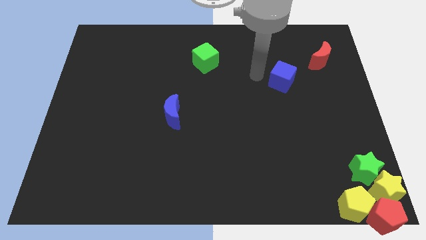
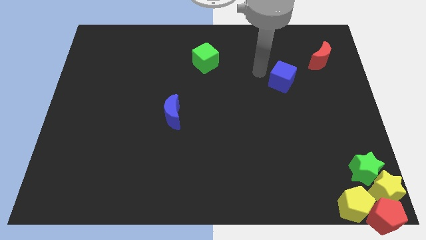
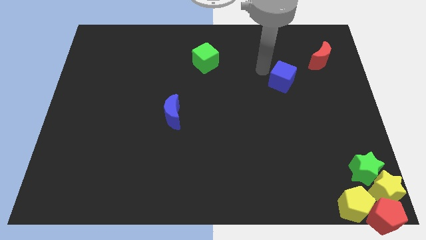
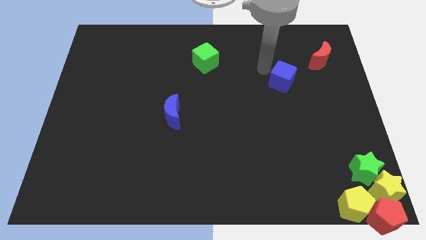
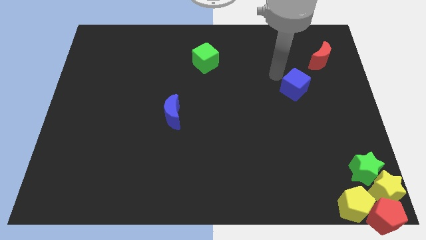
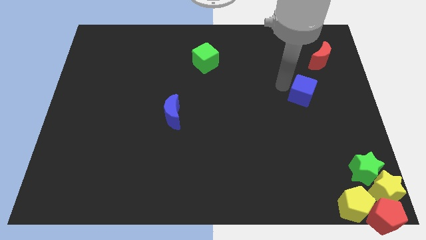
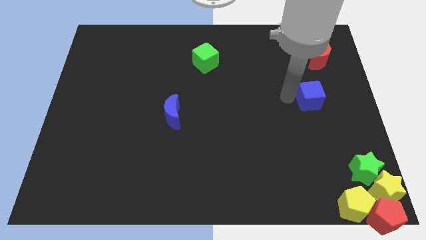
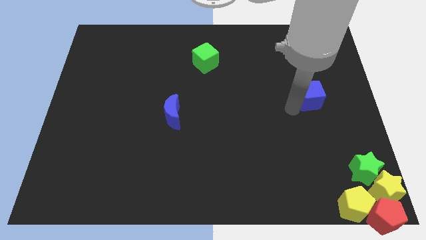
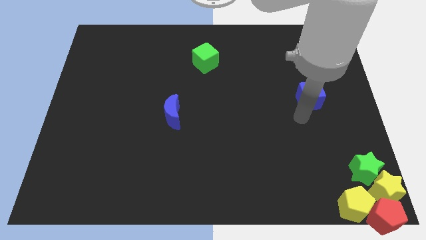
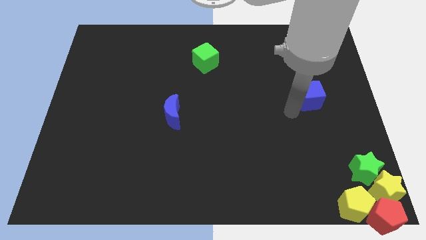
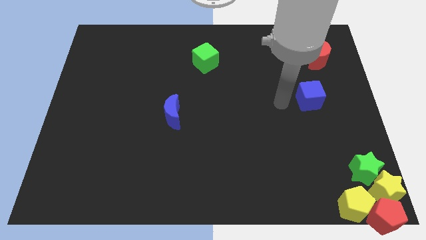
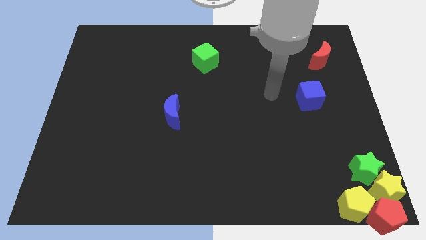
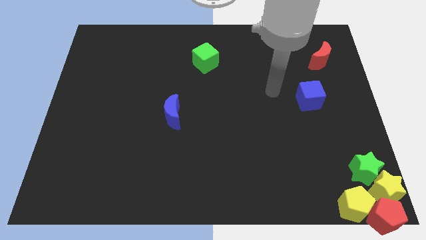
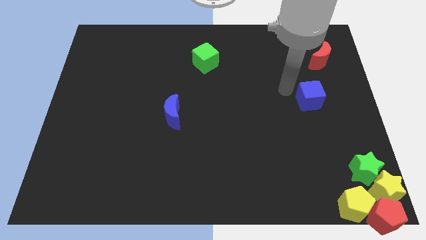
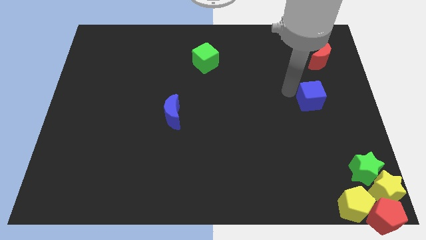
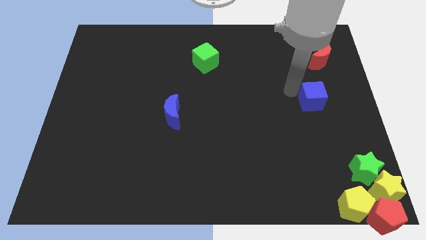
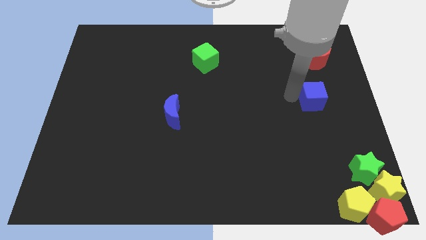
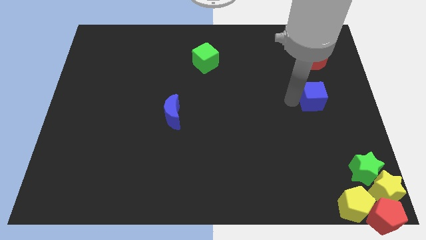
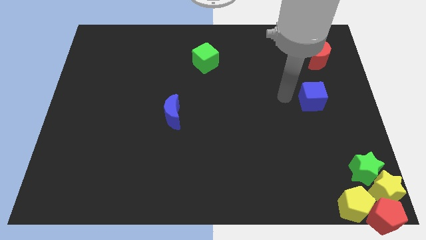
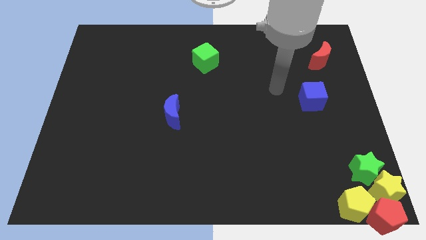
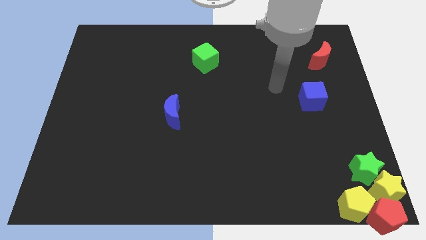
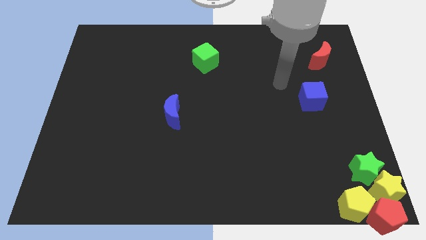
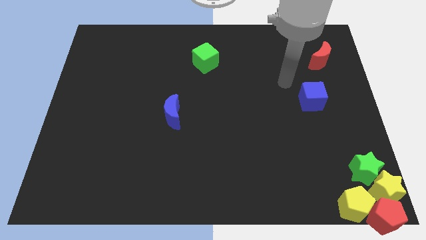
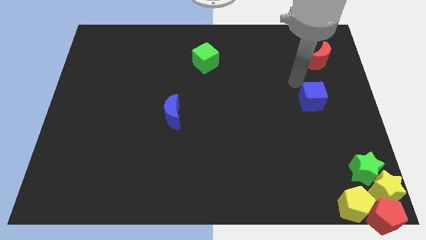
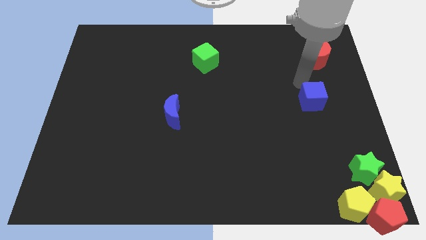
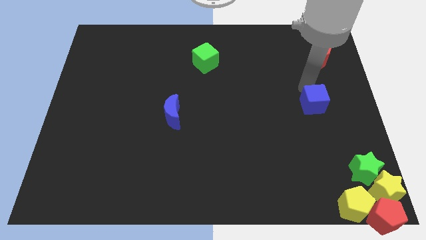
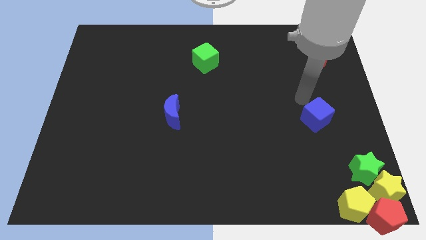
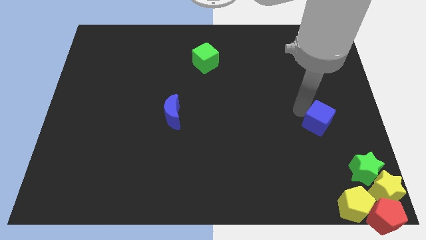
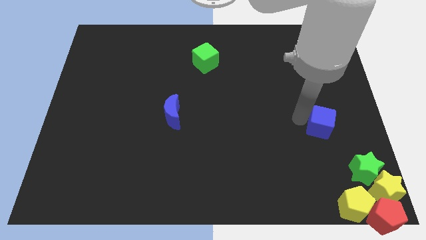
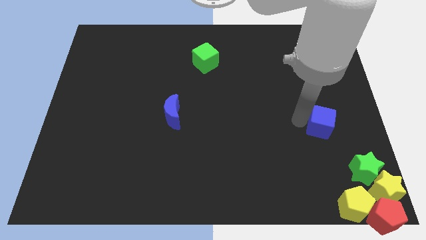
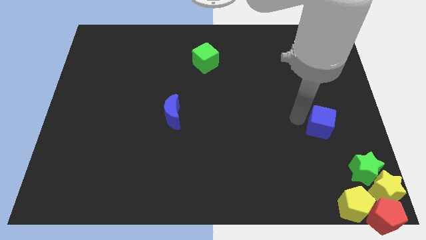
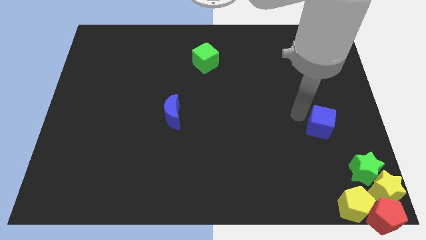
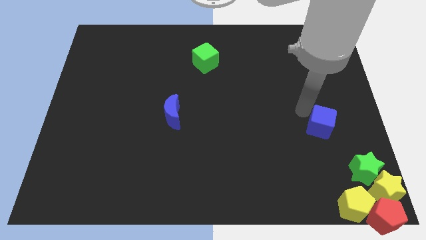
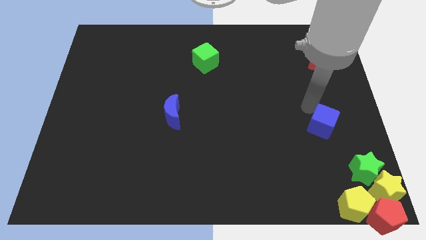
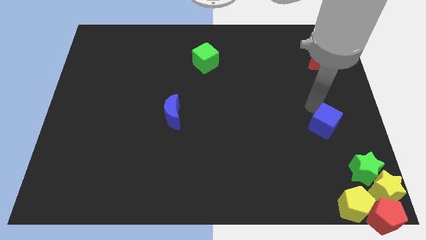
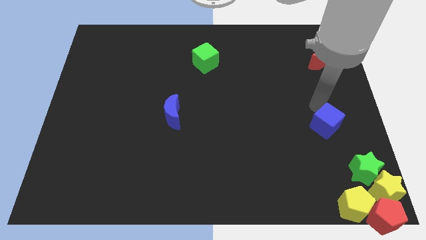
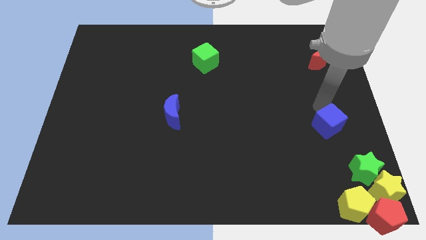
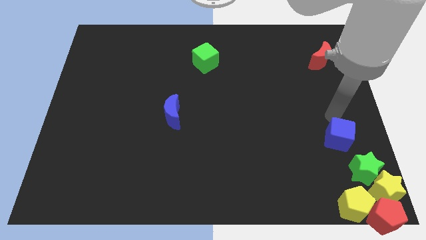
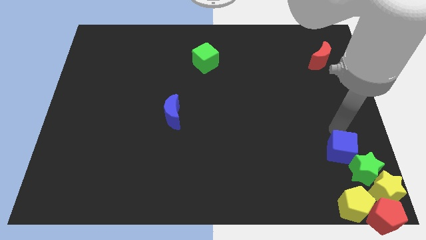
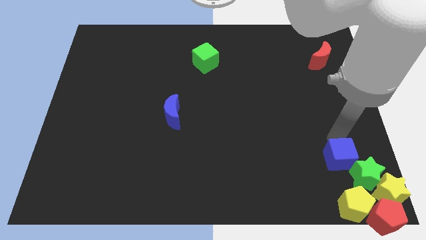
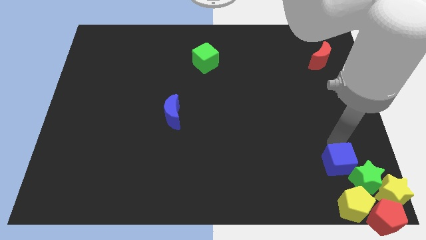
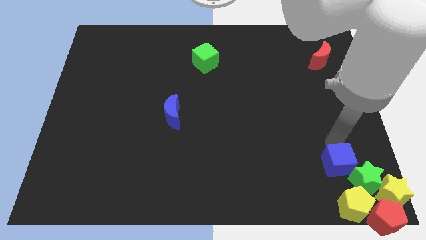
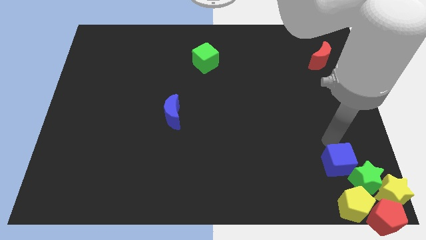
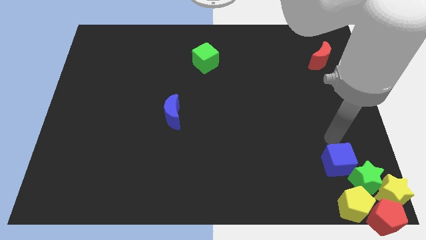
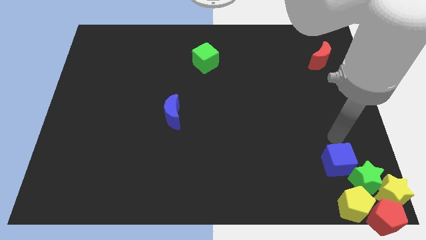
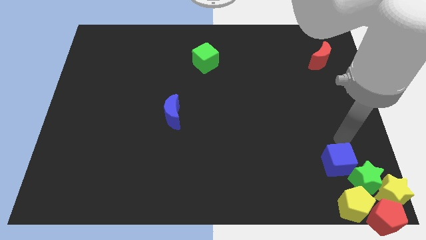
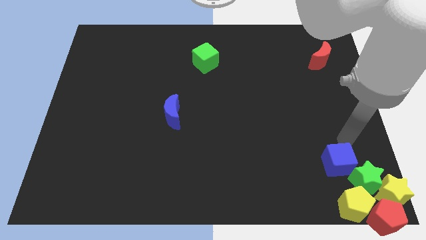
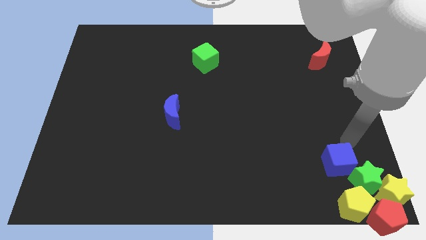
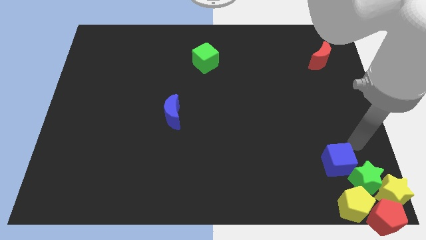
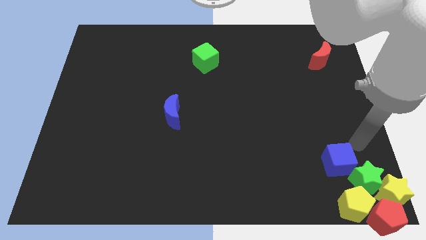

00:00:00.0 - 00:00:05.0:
push the blue cube into the group of blocks

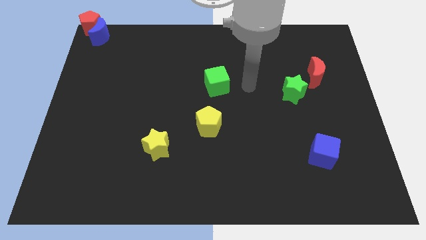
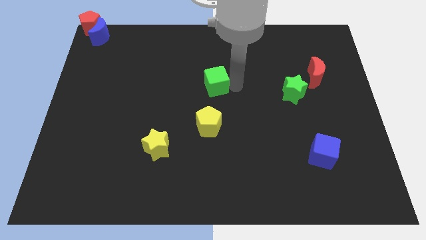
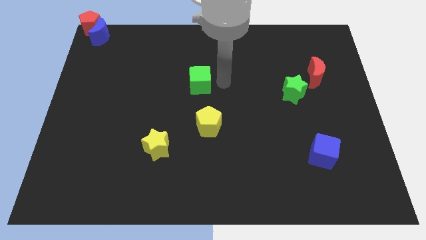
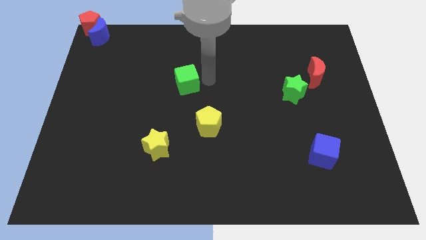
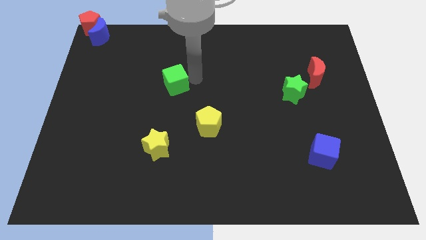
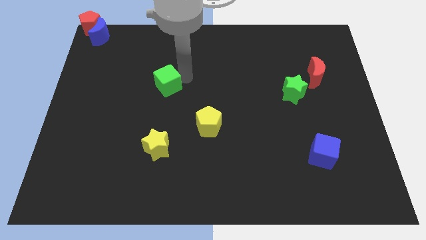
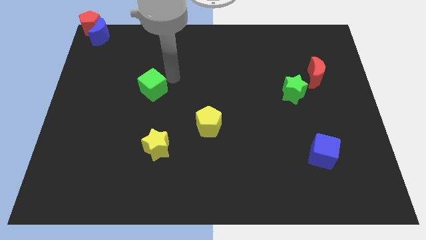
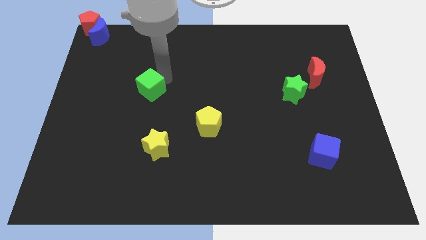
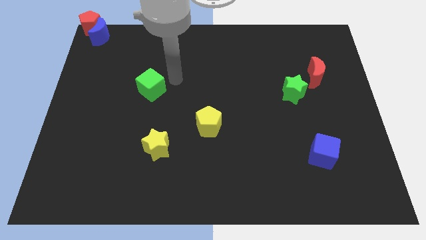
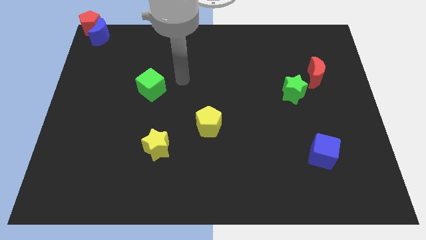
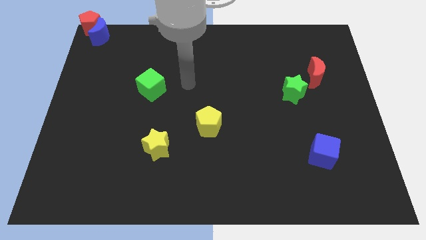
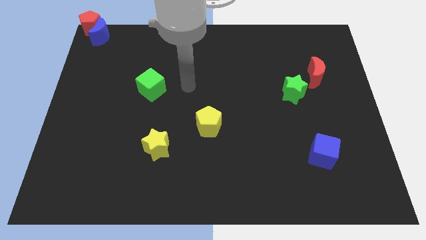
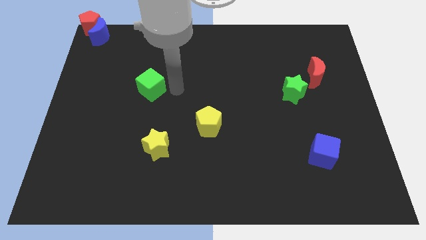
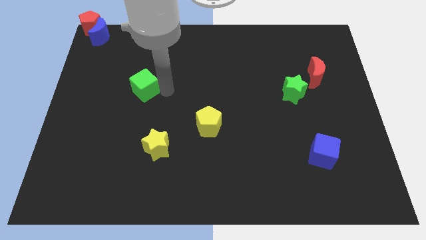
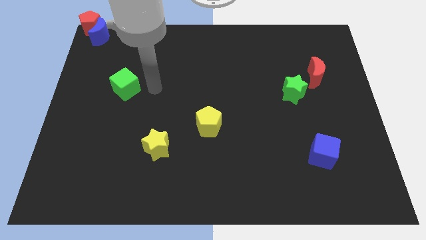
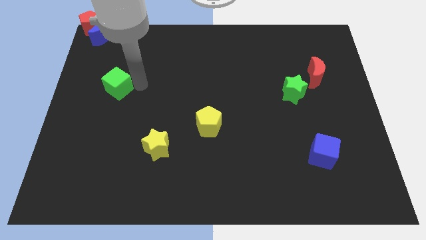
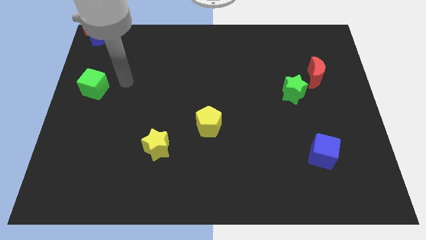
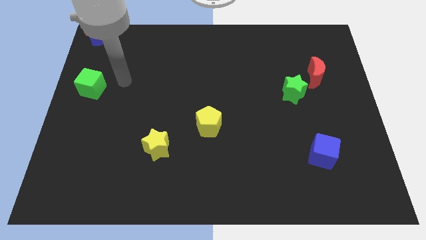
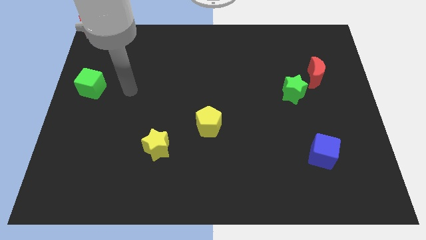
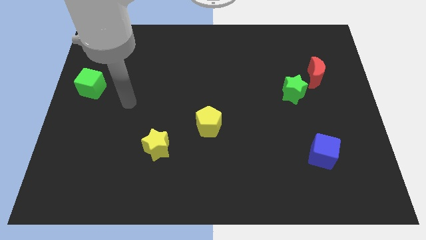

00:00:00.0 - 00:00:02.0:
push the green cube away from the green star on the left side horizontally

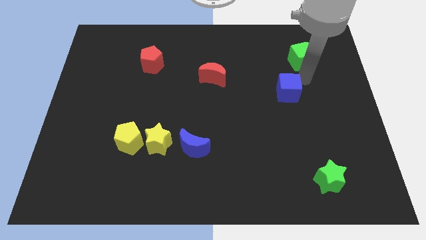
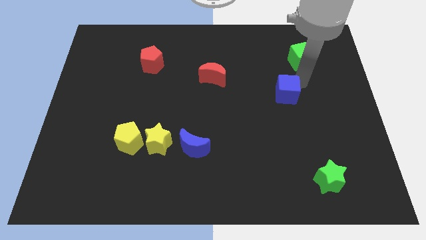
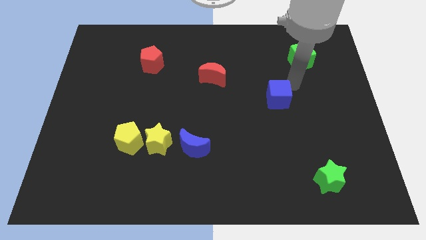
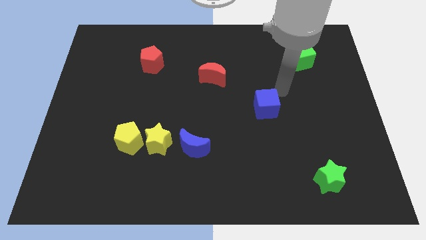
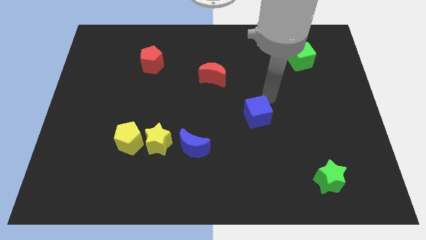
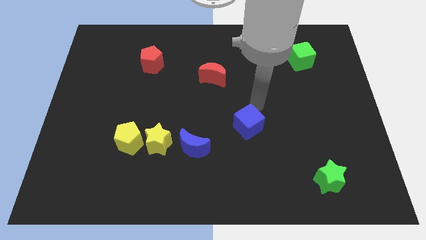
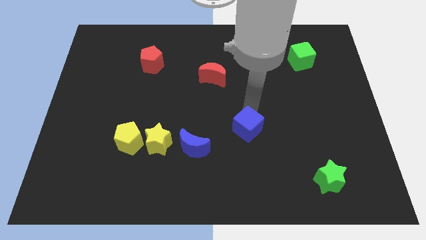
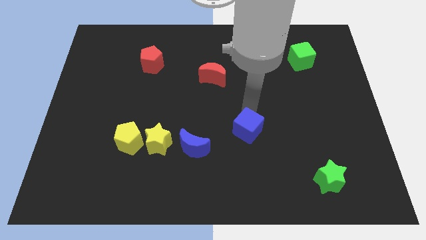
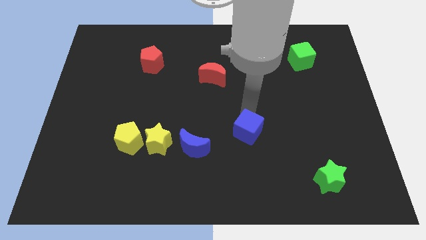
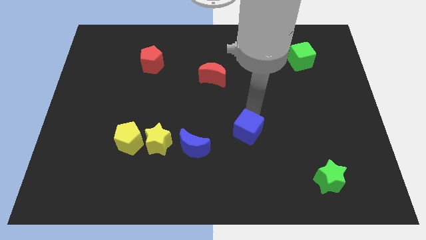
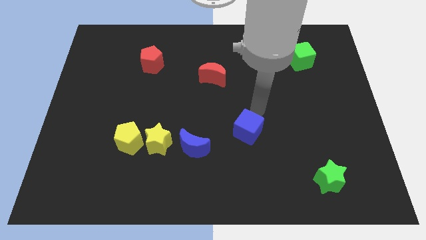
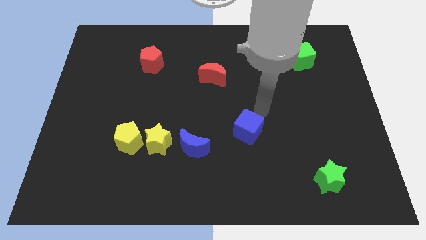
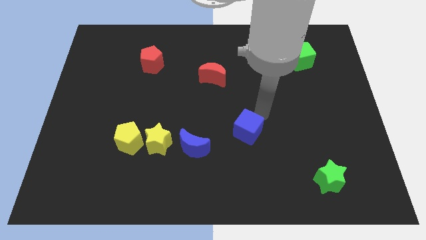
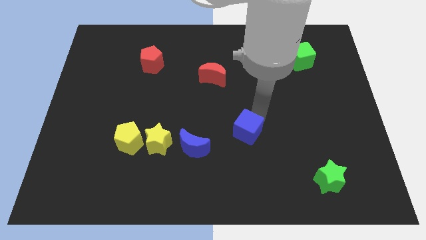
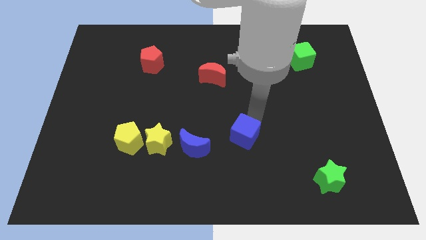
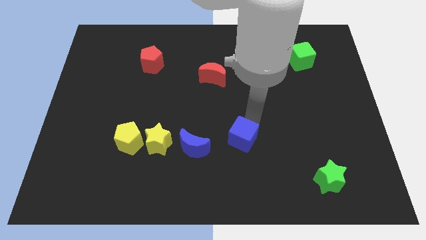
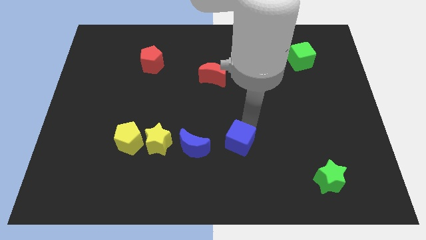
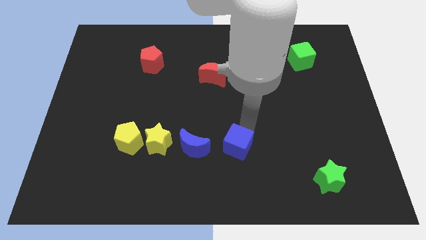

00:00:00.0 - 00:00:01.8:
move the blue cube to the right of the blue crescent

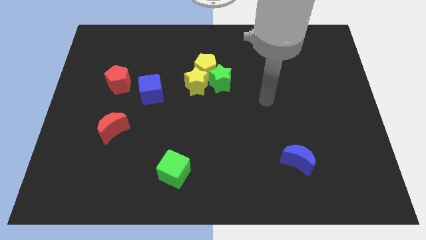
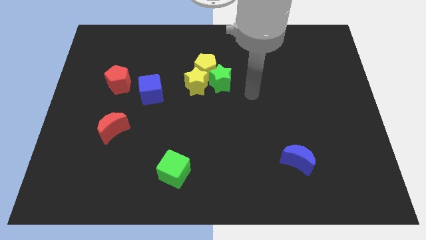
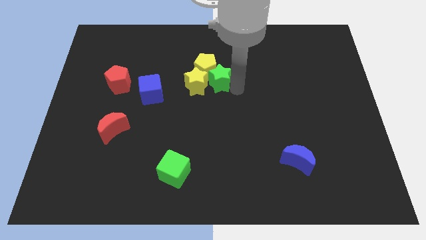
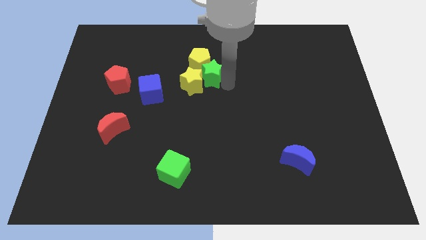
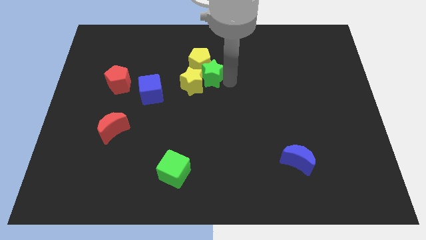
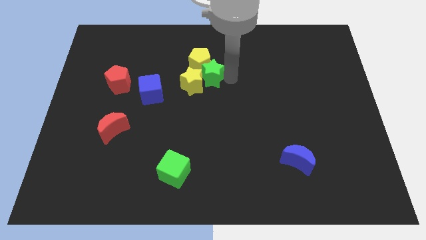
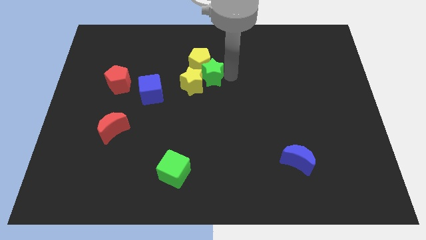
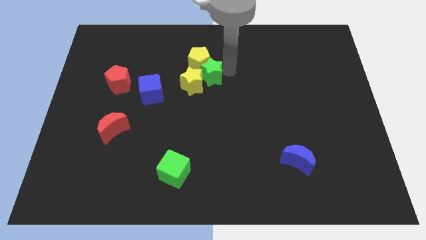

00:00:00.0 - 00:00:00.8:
push green star into yellow pentagon
